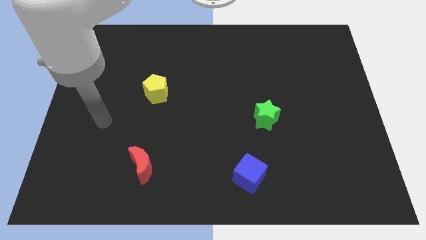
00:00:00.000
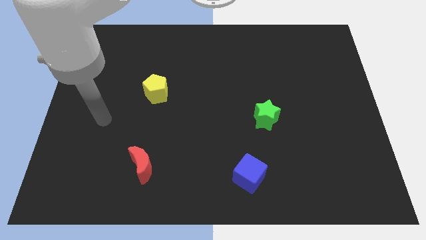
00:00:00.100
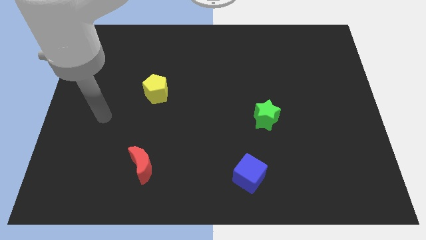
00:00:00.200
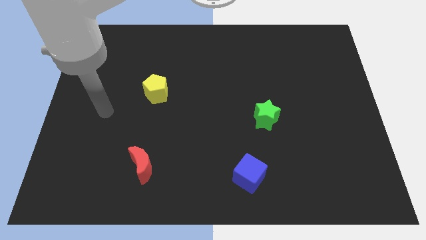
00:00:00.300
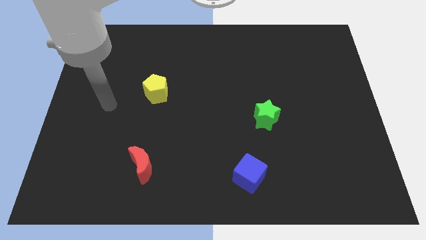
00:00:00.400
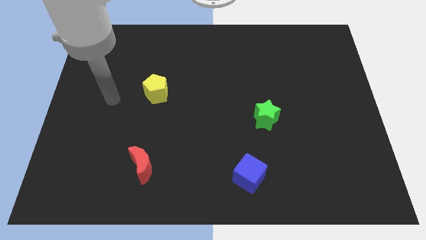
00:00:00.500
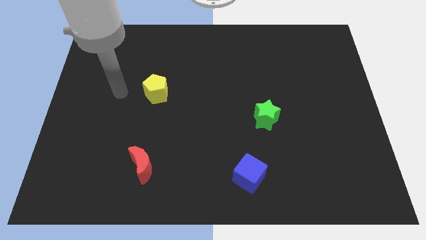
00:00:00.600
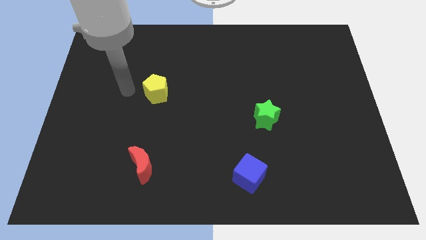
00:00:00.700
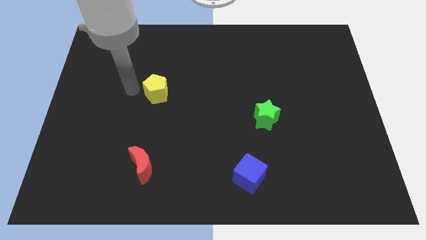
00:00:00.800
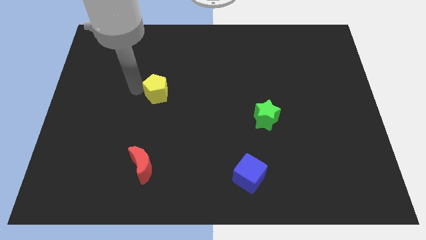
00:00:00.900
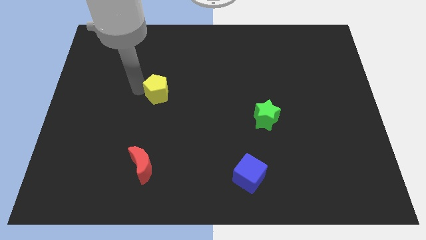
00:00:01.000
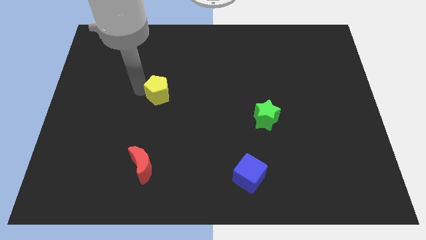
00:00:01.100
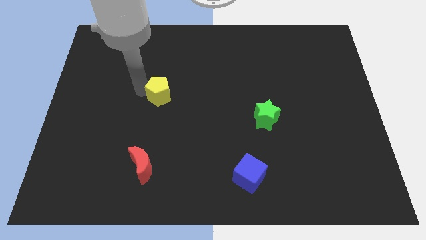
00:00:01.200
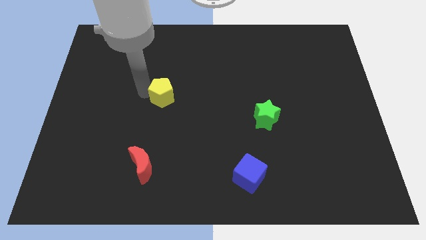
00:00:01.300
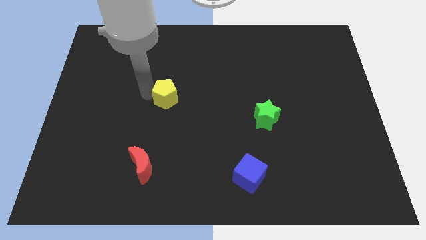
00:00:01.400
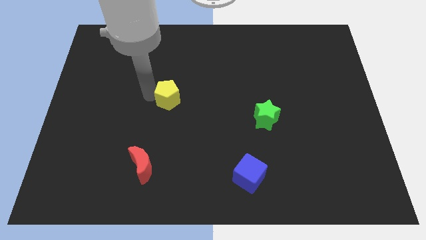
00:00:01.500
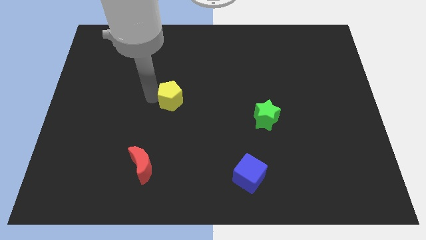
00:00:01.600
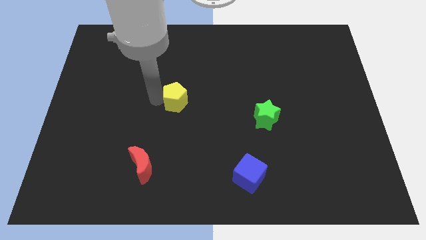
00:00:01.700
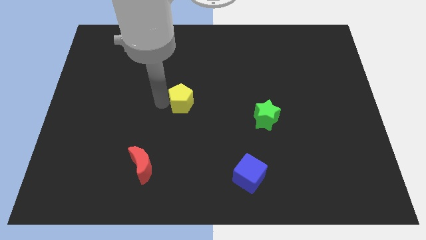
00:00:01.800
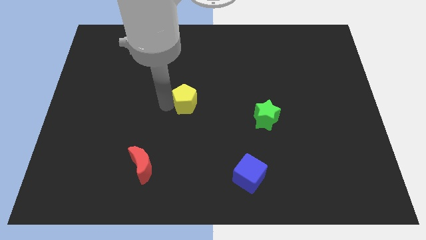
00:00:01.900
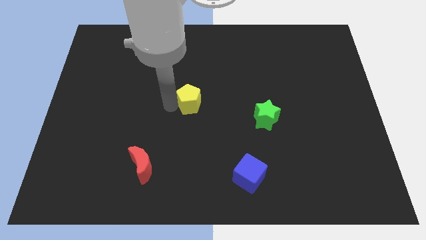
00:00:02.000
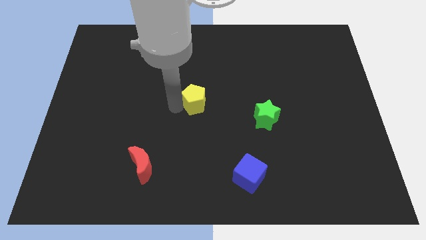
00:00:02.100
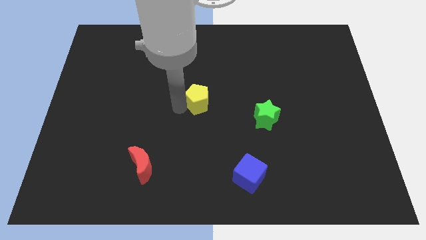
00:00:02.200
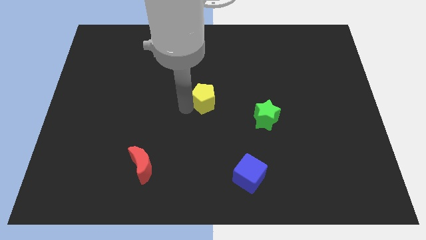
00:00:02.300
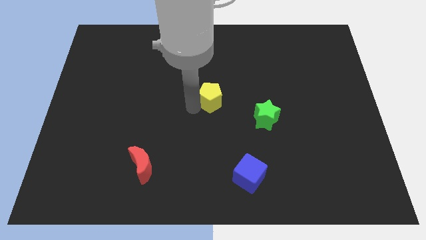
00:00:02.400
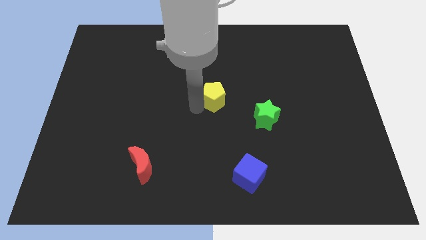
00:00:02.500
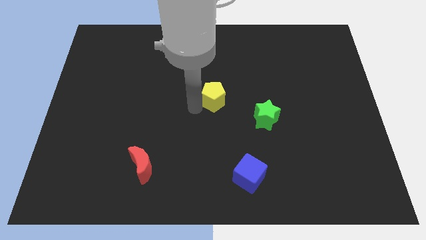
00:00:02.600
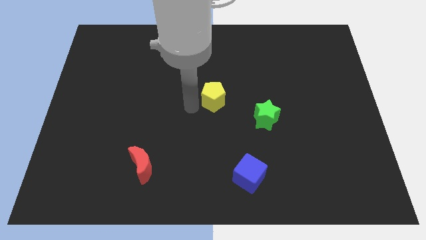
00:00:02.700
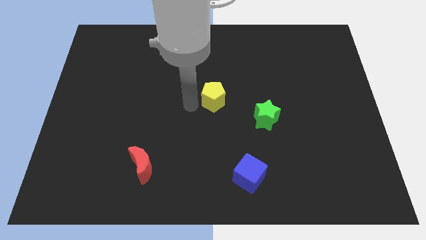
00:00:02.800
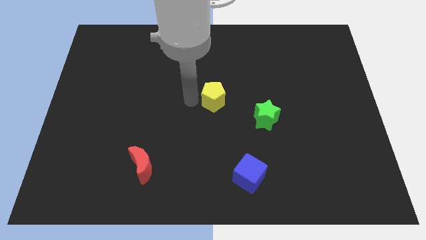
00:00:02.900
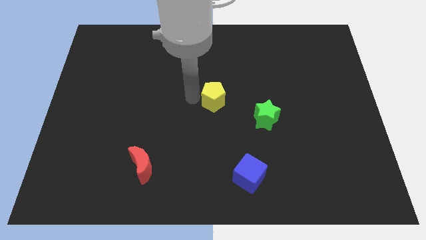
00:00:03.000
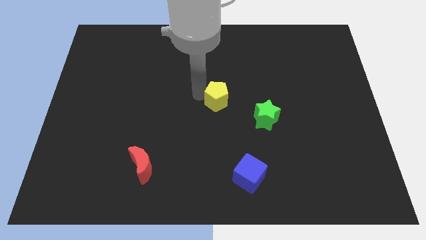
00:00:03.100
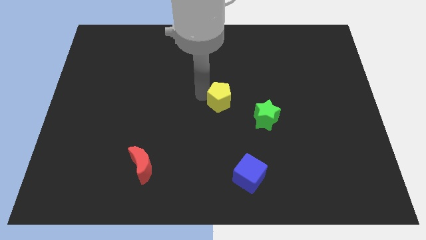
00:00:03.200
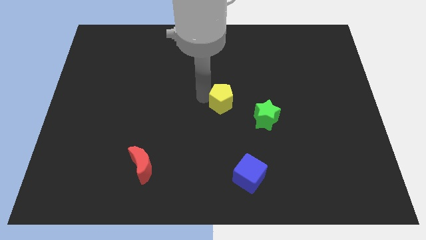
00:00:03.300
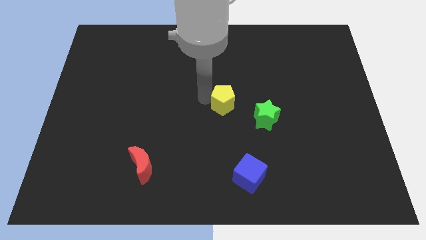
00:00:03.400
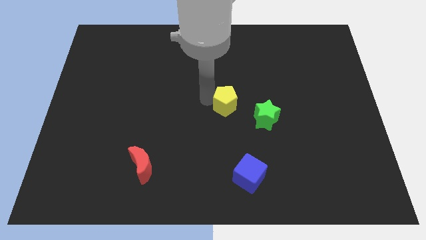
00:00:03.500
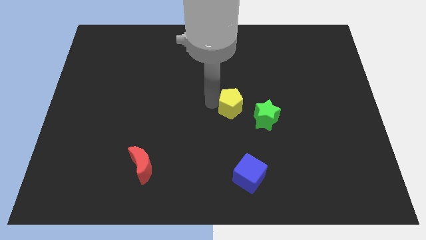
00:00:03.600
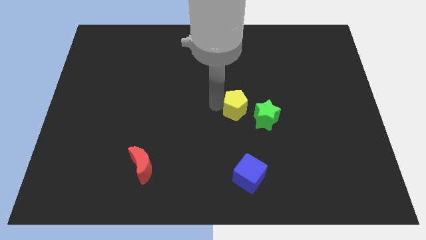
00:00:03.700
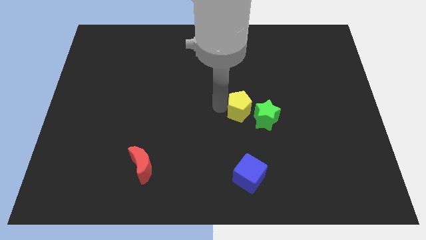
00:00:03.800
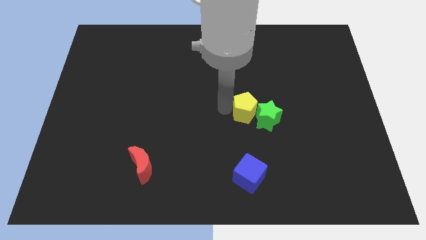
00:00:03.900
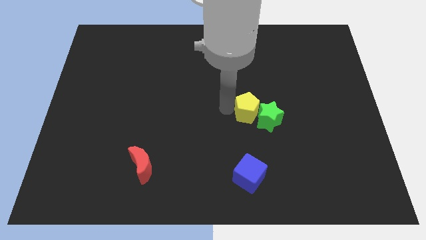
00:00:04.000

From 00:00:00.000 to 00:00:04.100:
push the yellow pentagon towards the green block

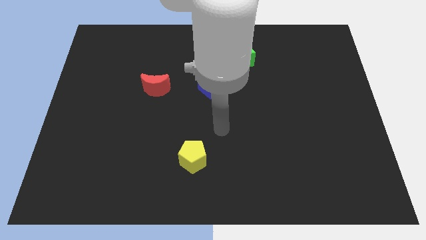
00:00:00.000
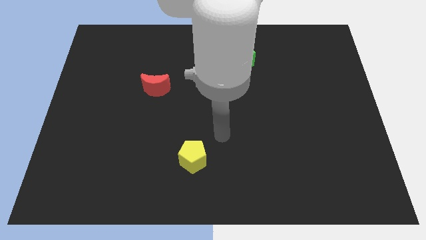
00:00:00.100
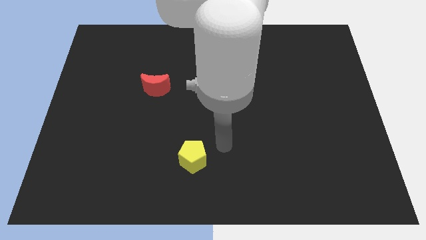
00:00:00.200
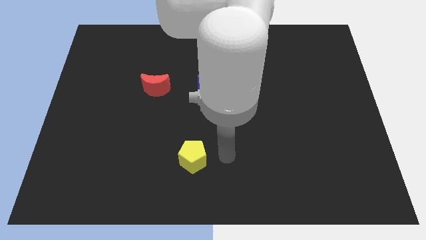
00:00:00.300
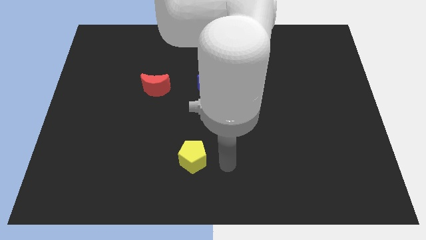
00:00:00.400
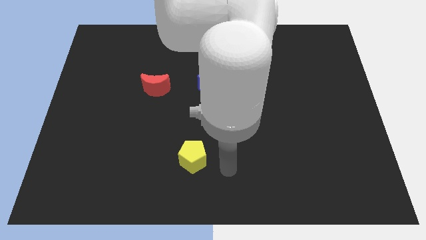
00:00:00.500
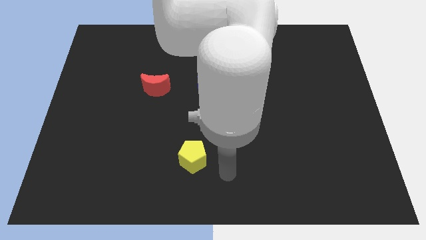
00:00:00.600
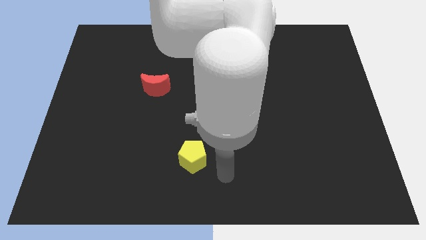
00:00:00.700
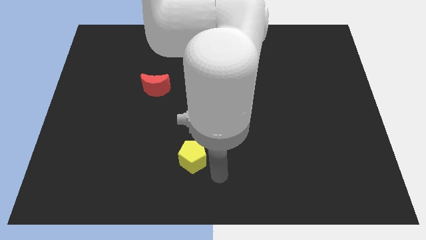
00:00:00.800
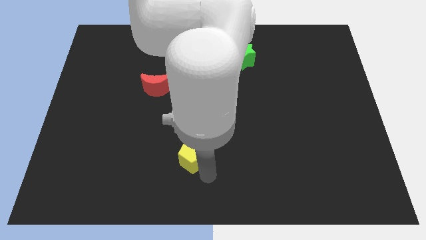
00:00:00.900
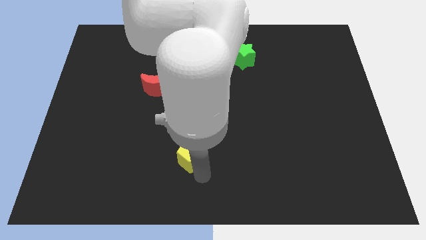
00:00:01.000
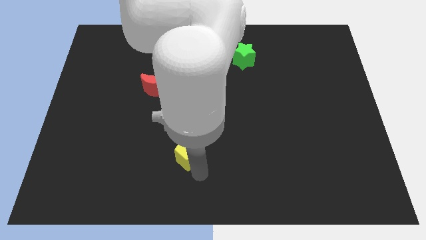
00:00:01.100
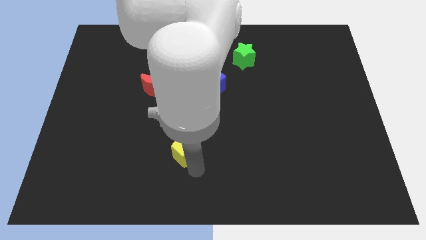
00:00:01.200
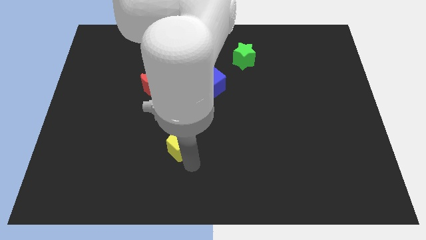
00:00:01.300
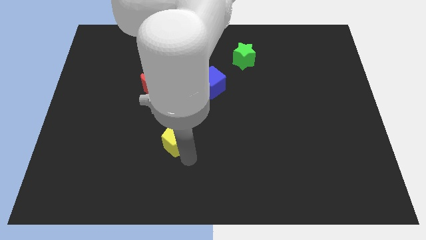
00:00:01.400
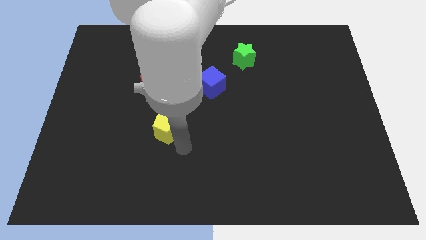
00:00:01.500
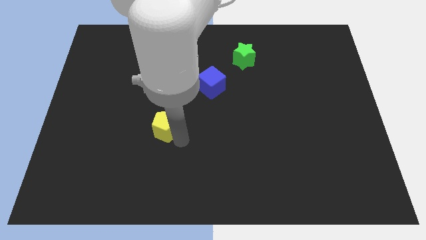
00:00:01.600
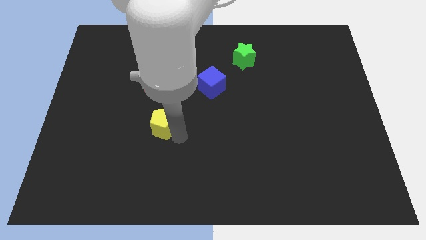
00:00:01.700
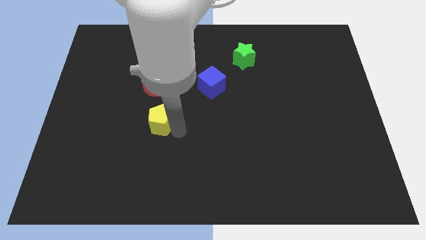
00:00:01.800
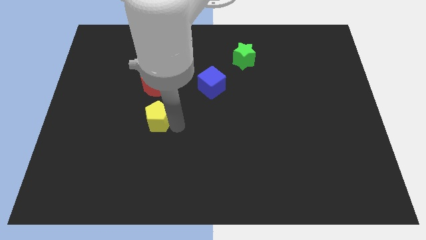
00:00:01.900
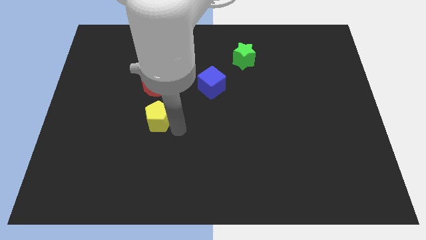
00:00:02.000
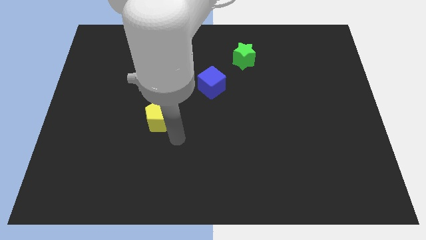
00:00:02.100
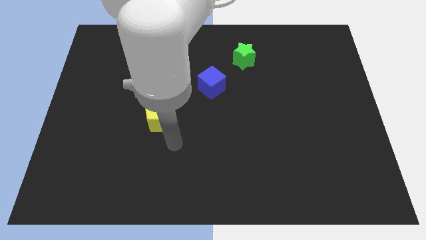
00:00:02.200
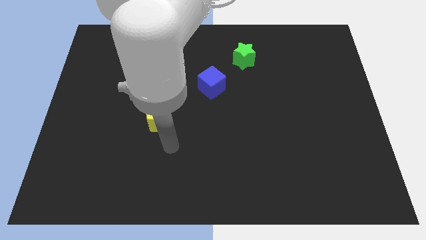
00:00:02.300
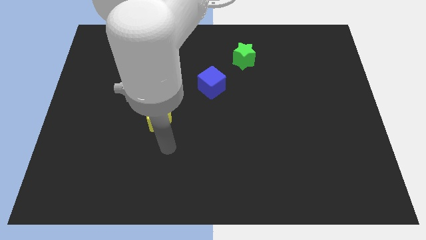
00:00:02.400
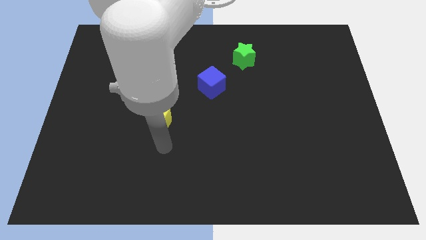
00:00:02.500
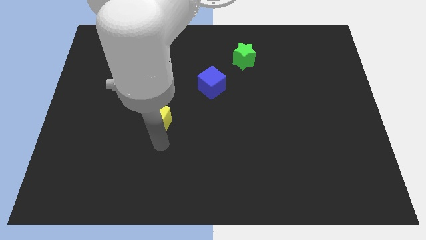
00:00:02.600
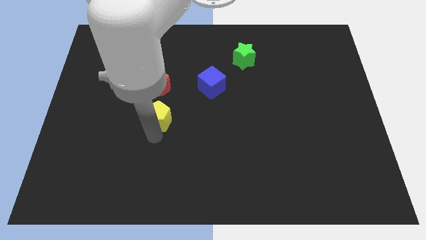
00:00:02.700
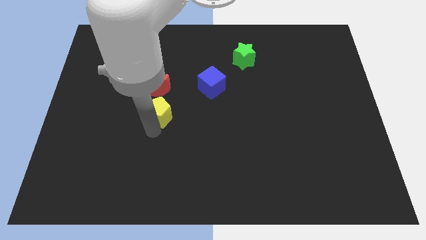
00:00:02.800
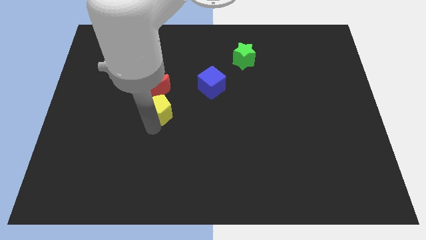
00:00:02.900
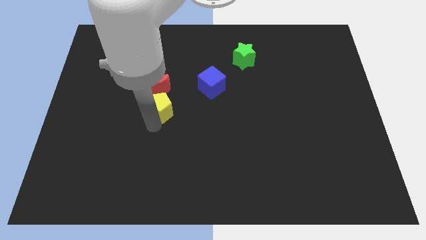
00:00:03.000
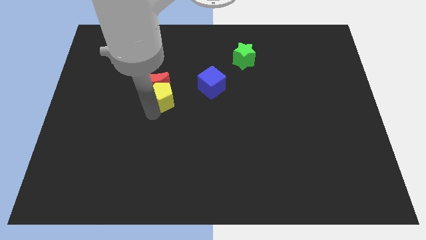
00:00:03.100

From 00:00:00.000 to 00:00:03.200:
slide the pentagon close to the red moon

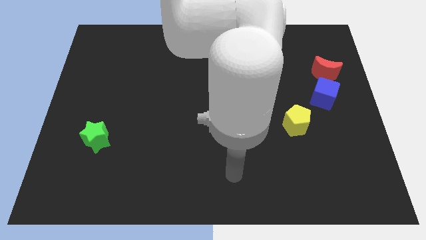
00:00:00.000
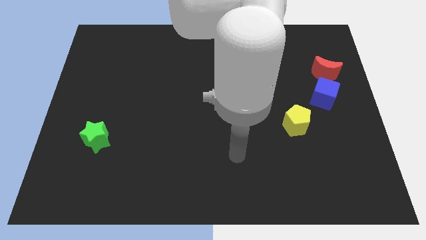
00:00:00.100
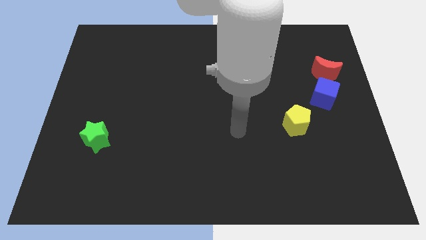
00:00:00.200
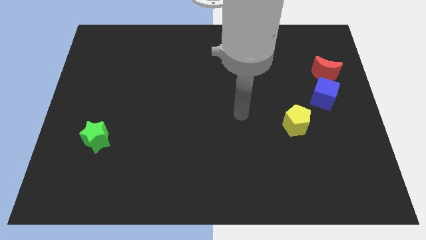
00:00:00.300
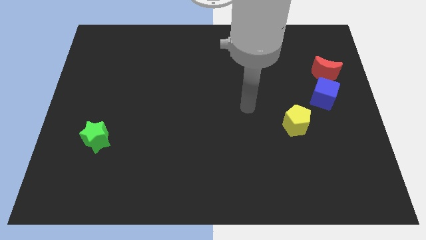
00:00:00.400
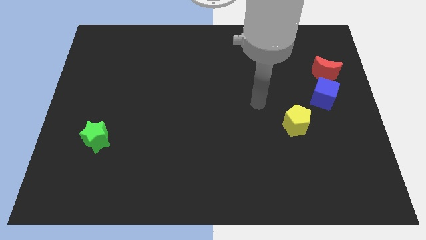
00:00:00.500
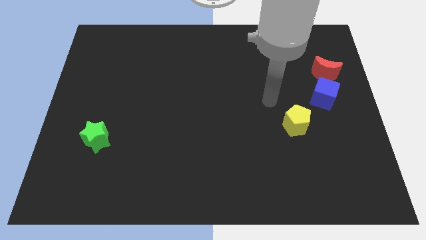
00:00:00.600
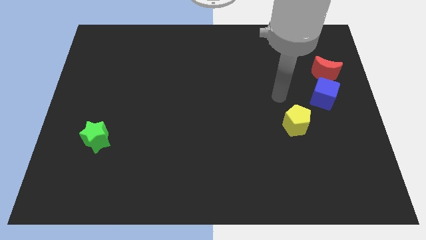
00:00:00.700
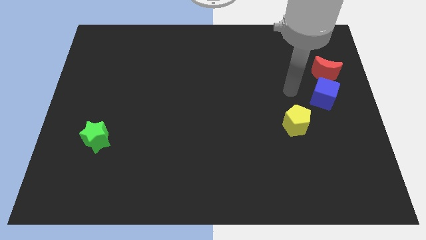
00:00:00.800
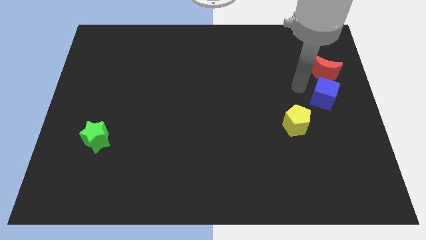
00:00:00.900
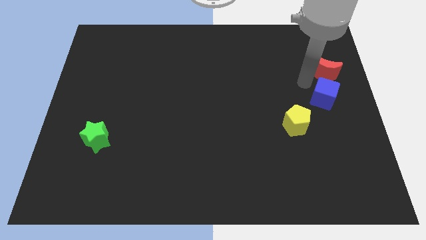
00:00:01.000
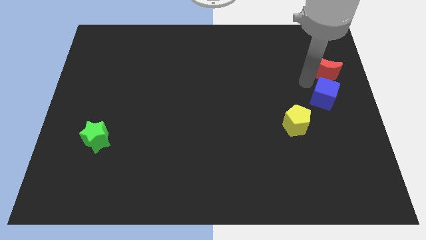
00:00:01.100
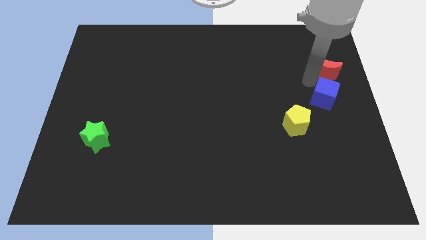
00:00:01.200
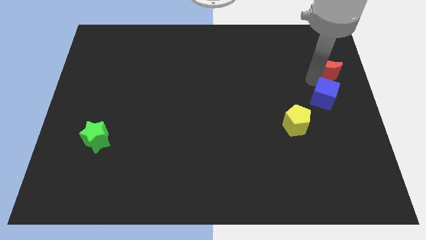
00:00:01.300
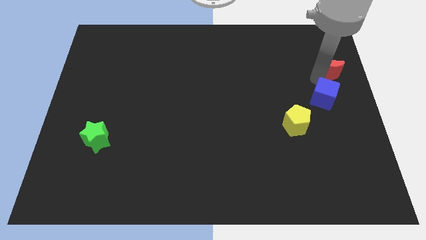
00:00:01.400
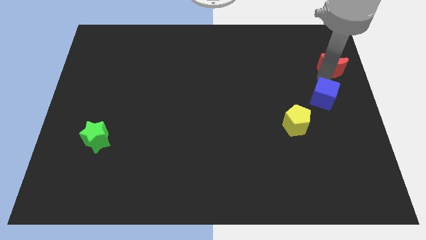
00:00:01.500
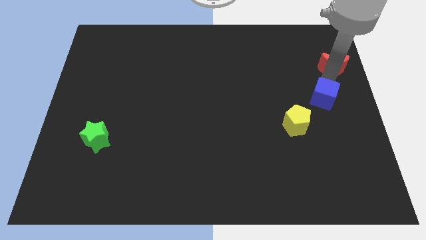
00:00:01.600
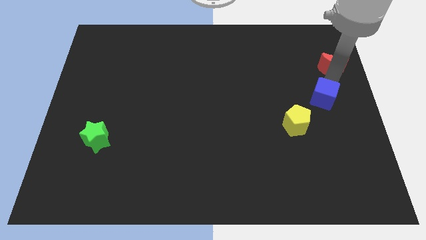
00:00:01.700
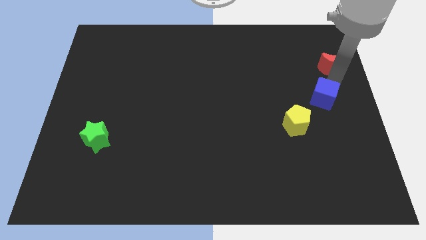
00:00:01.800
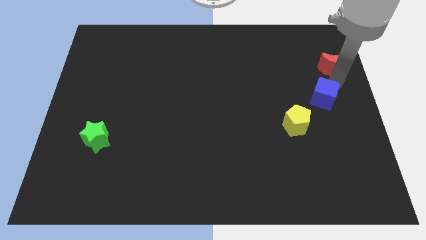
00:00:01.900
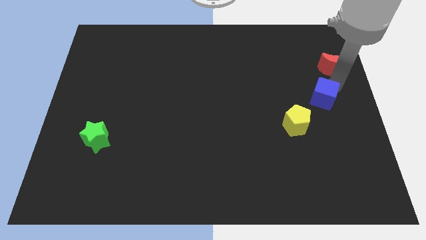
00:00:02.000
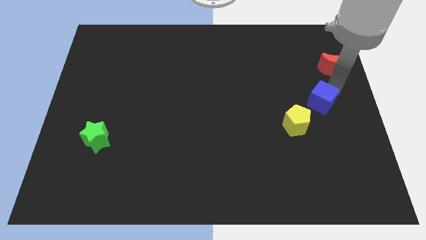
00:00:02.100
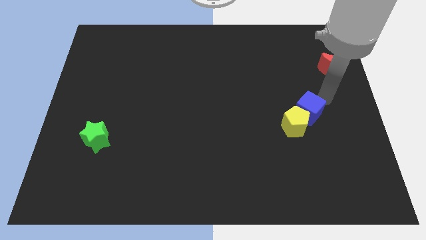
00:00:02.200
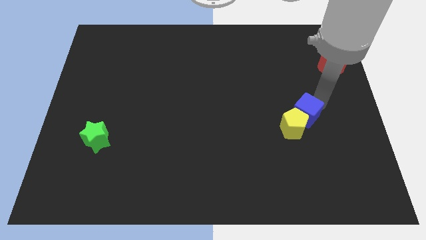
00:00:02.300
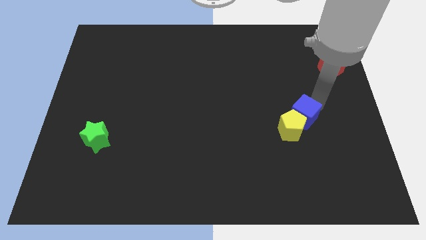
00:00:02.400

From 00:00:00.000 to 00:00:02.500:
slide the blue block close to the yellow pentagon
